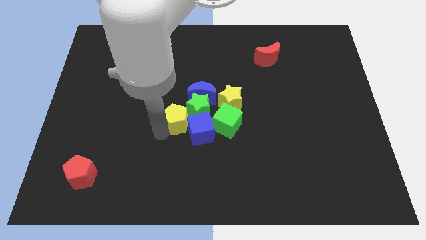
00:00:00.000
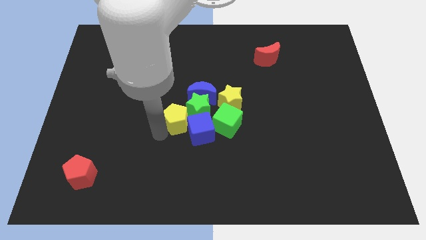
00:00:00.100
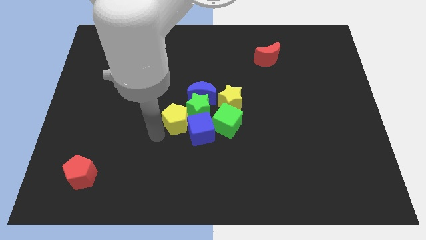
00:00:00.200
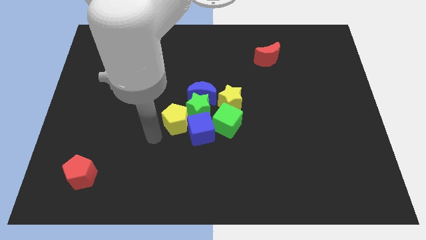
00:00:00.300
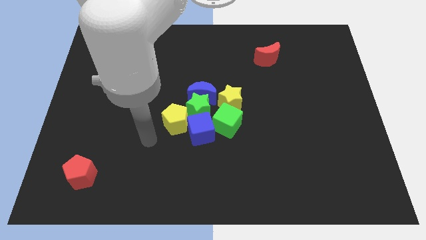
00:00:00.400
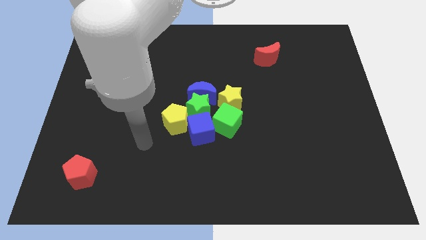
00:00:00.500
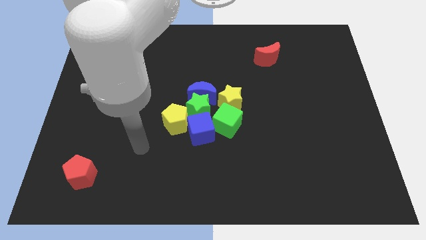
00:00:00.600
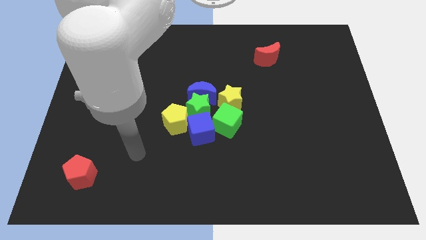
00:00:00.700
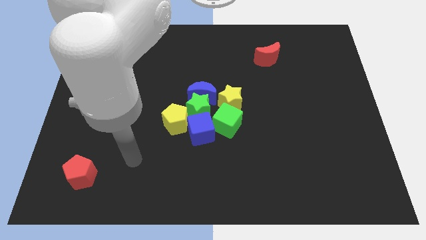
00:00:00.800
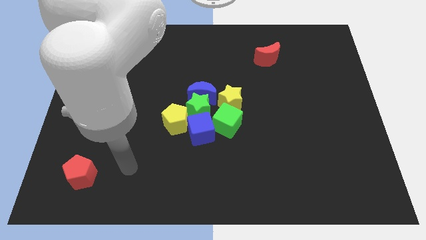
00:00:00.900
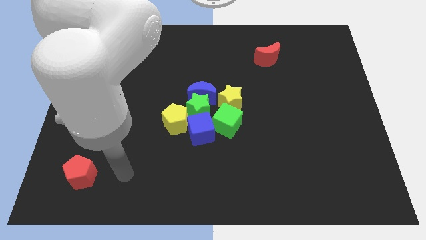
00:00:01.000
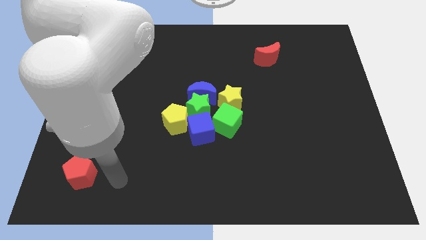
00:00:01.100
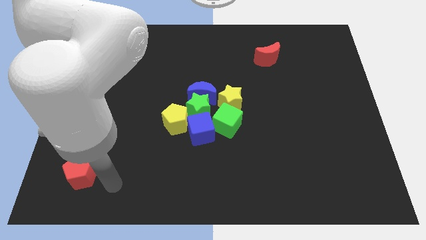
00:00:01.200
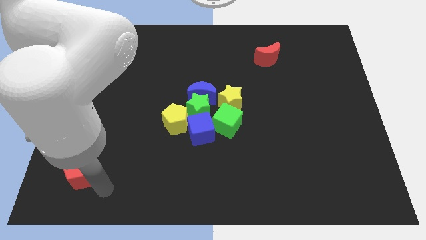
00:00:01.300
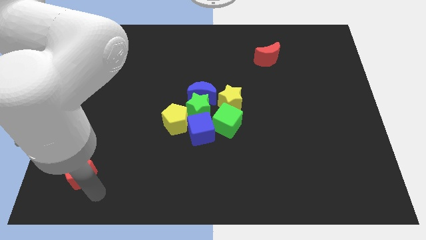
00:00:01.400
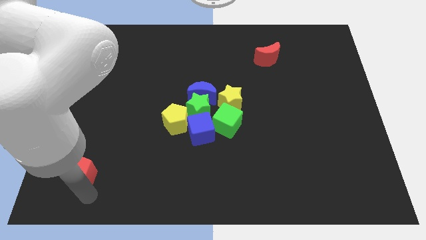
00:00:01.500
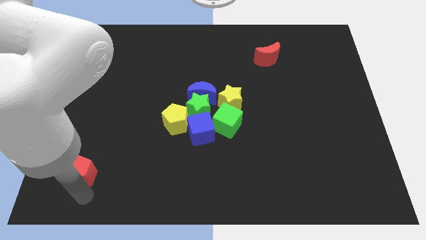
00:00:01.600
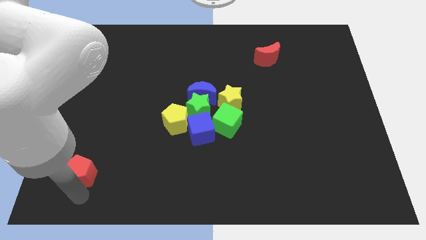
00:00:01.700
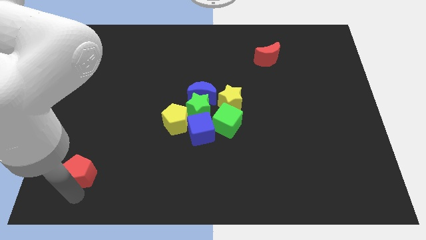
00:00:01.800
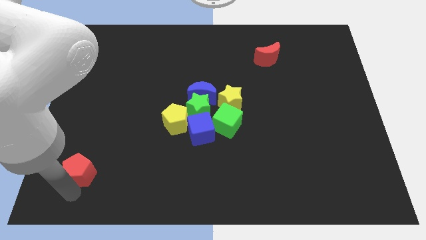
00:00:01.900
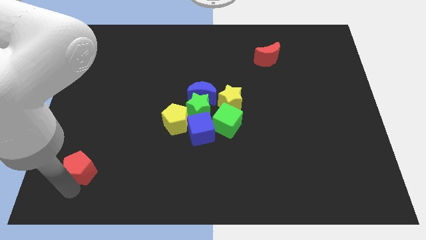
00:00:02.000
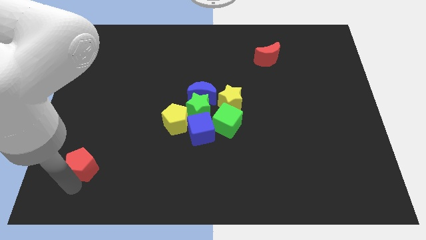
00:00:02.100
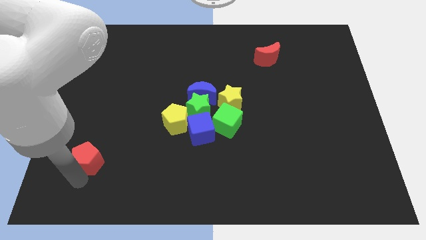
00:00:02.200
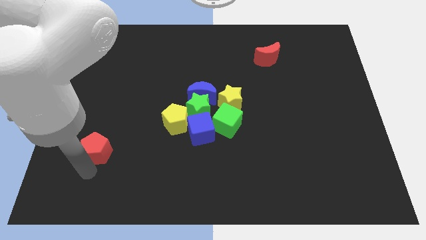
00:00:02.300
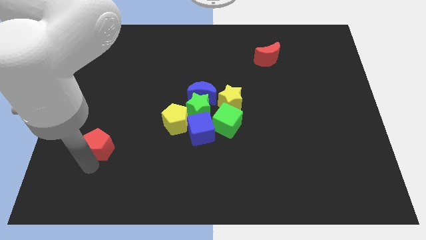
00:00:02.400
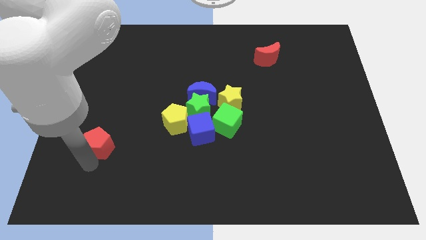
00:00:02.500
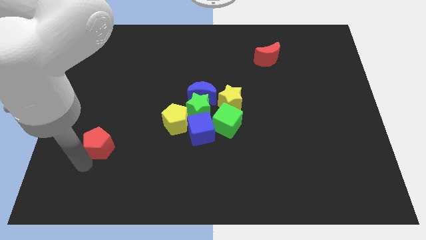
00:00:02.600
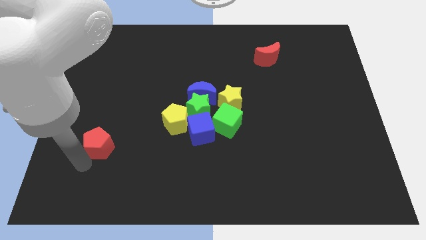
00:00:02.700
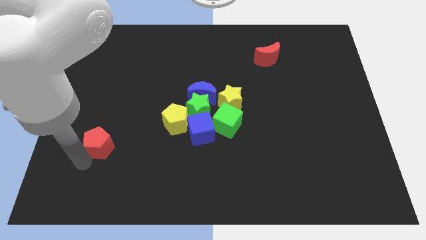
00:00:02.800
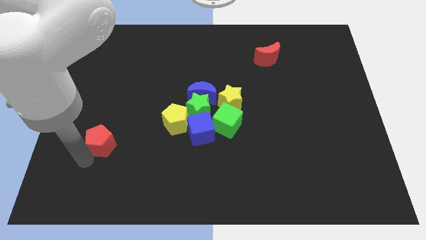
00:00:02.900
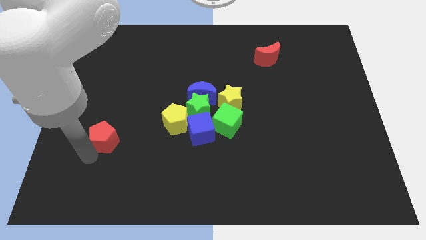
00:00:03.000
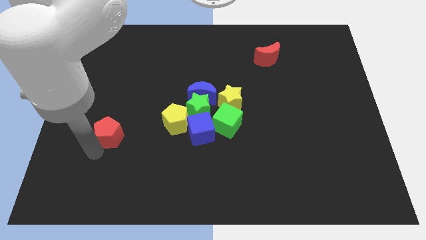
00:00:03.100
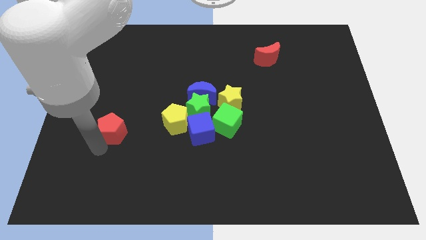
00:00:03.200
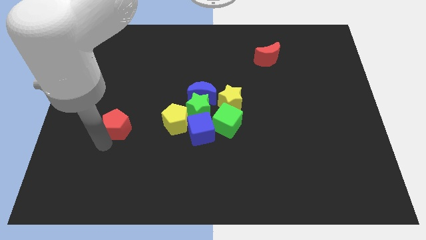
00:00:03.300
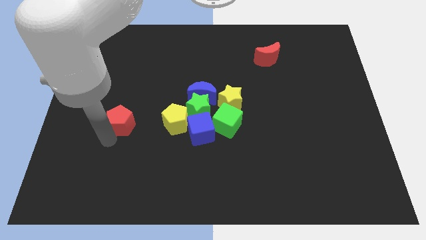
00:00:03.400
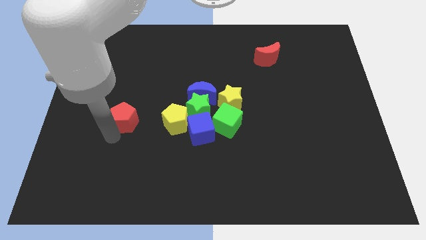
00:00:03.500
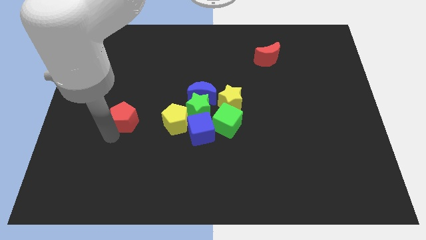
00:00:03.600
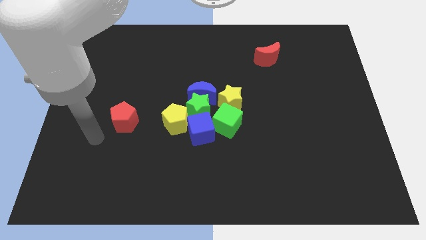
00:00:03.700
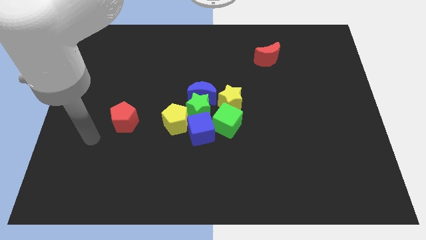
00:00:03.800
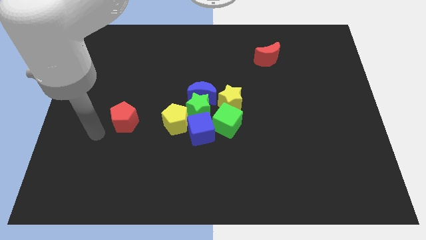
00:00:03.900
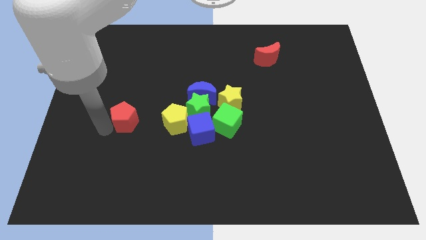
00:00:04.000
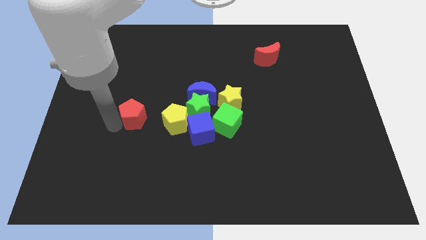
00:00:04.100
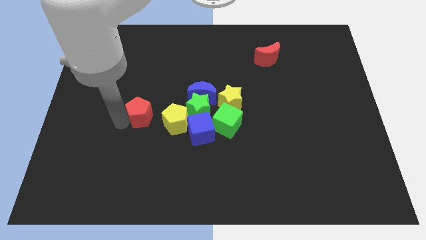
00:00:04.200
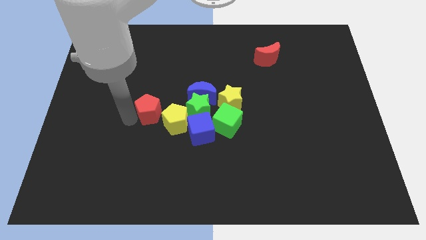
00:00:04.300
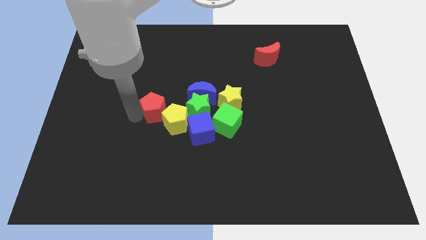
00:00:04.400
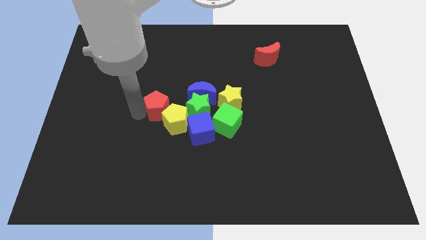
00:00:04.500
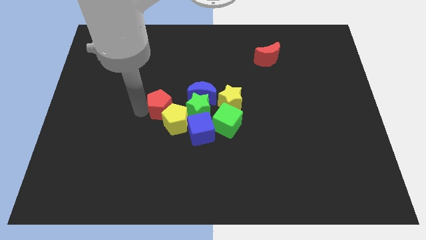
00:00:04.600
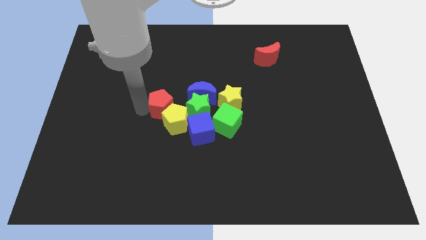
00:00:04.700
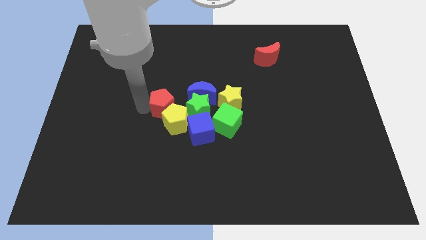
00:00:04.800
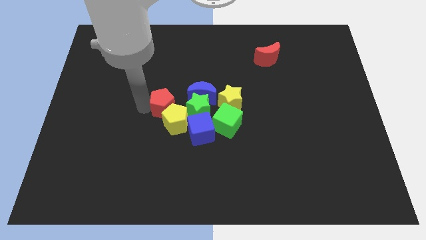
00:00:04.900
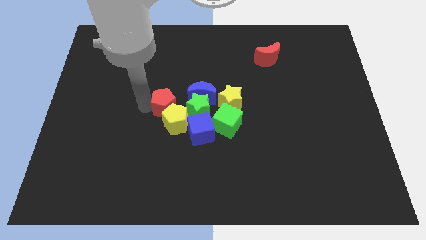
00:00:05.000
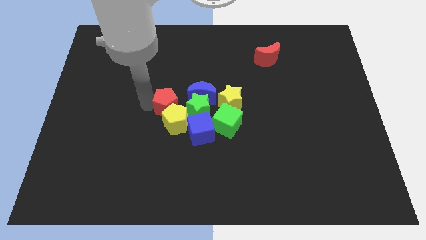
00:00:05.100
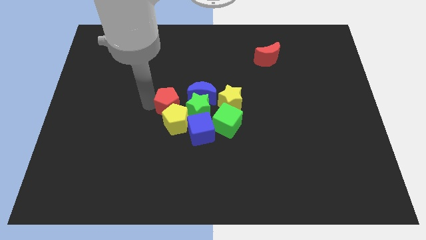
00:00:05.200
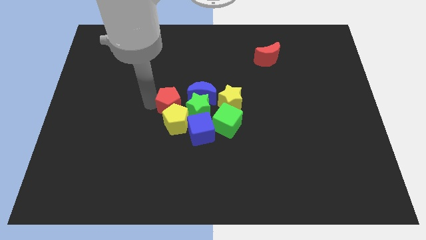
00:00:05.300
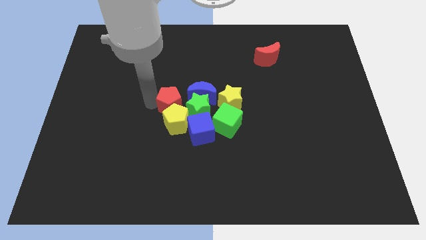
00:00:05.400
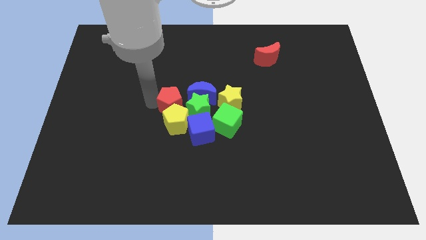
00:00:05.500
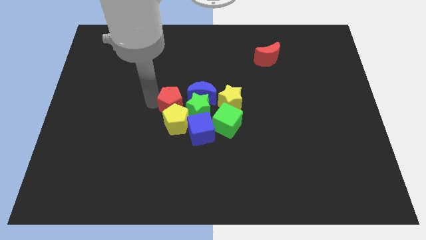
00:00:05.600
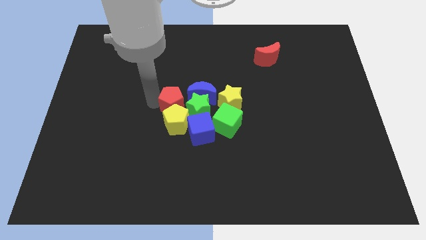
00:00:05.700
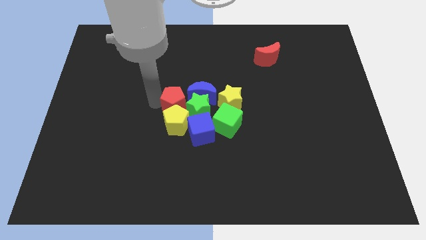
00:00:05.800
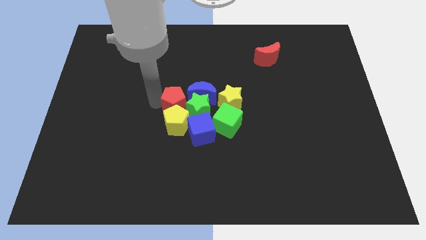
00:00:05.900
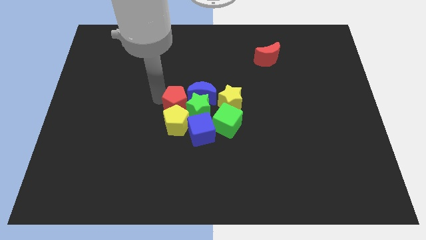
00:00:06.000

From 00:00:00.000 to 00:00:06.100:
put the red pentagon above the yellow pentagon

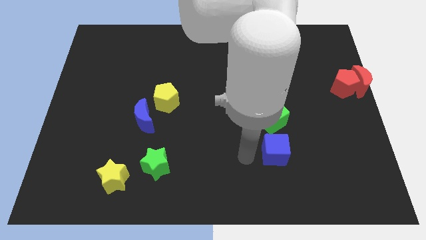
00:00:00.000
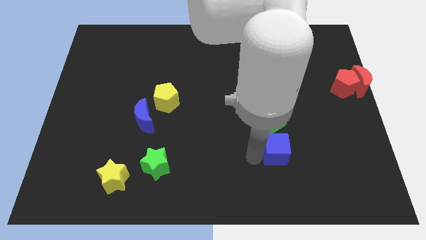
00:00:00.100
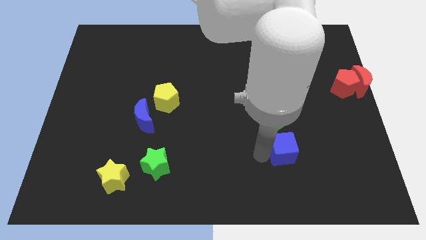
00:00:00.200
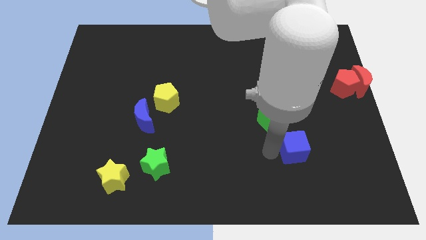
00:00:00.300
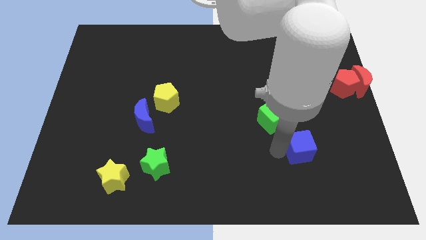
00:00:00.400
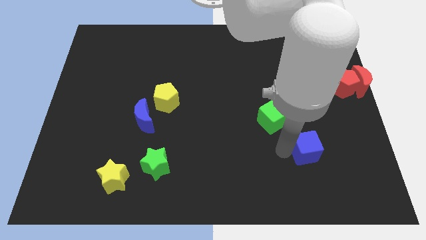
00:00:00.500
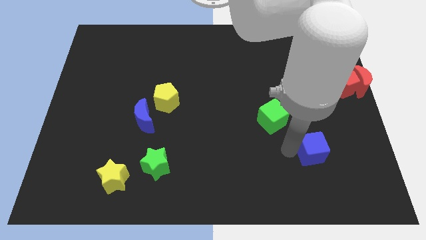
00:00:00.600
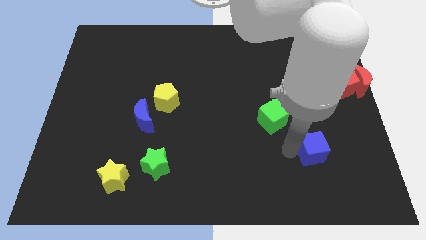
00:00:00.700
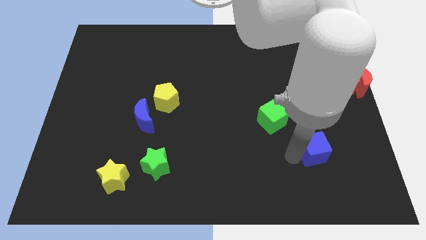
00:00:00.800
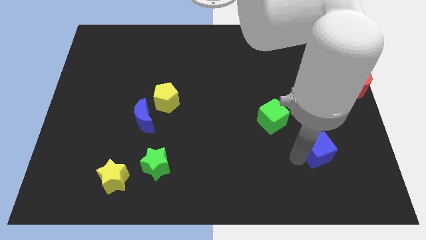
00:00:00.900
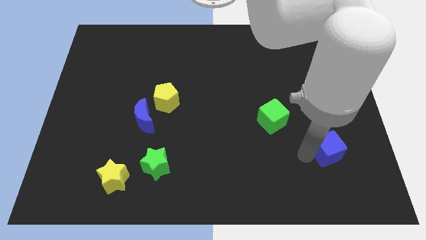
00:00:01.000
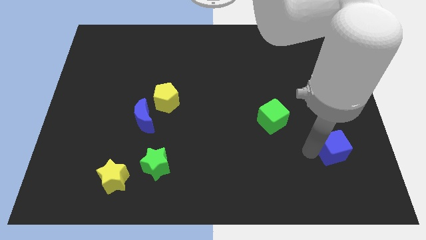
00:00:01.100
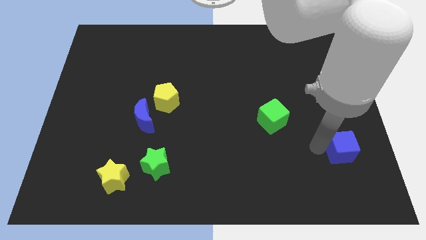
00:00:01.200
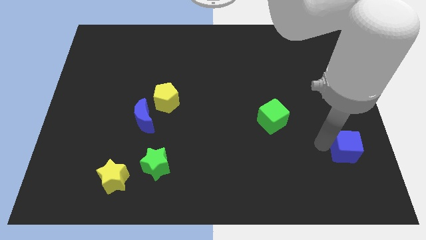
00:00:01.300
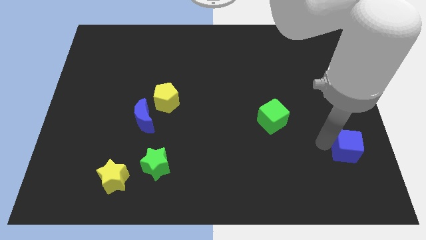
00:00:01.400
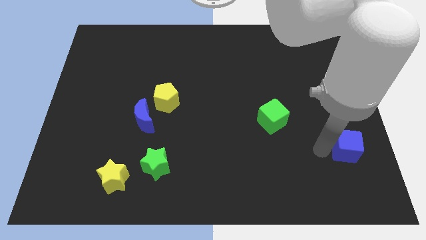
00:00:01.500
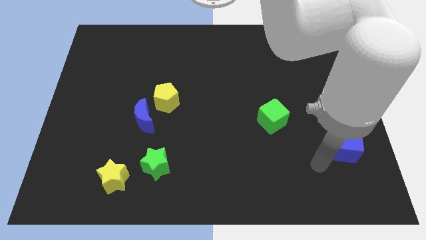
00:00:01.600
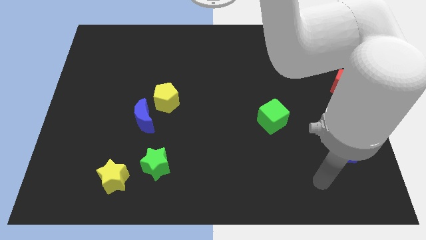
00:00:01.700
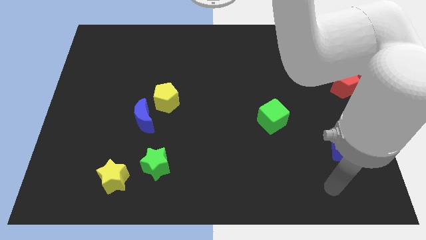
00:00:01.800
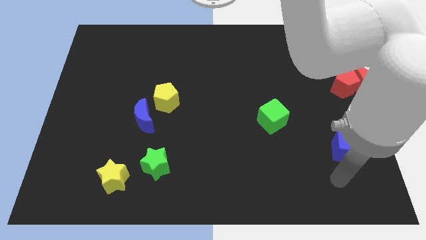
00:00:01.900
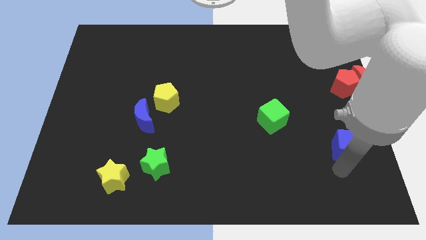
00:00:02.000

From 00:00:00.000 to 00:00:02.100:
move blue cube towards center right

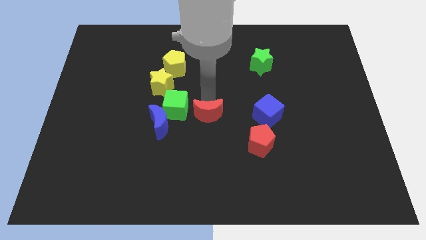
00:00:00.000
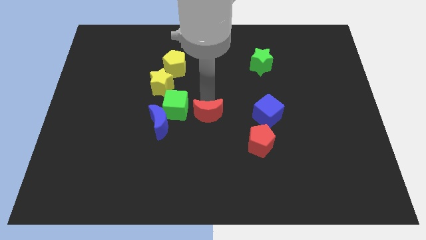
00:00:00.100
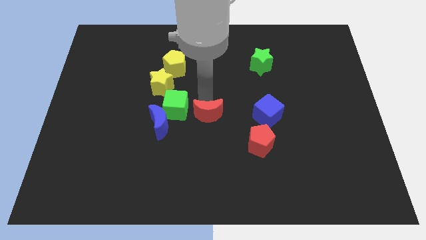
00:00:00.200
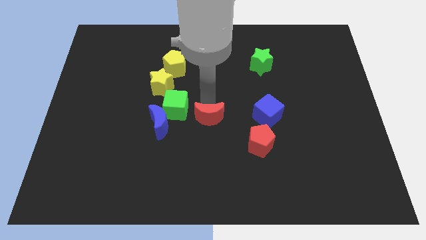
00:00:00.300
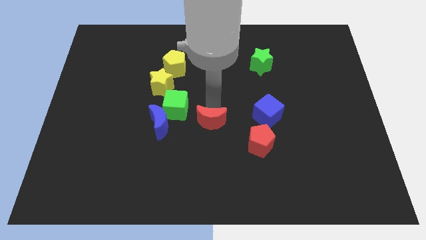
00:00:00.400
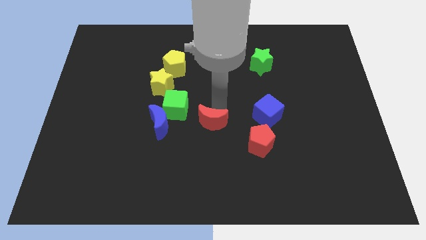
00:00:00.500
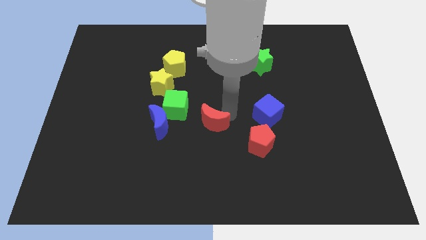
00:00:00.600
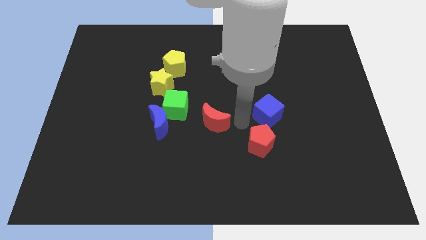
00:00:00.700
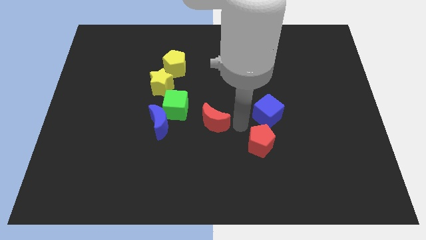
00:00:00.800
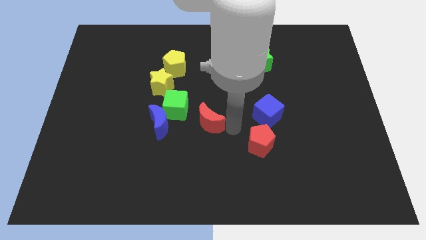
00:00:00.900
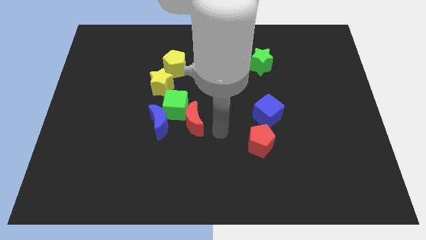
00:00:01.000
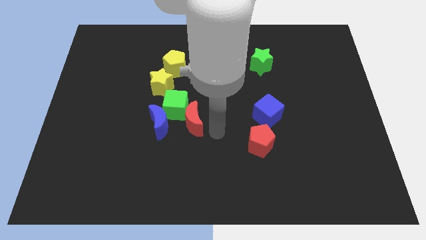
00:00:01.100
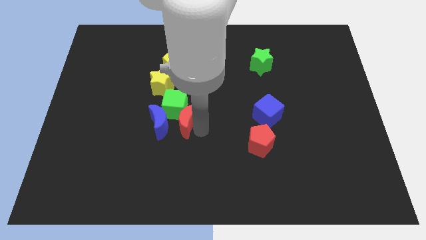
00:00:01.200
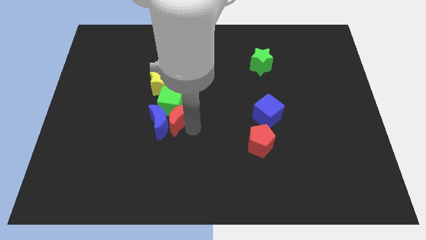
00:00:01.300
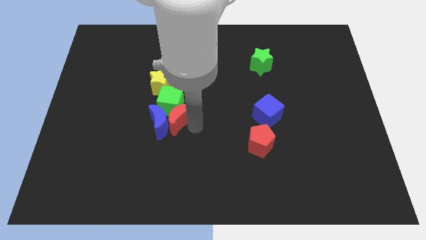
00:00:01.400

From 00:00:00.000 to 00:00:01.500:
slide the red moon into the green cube
